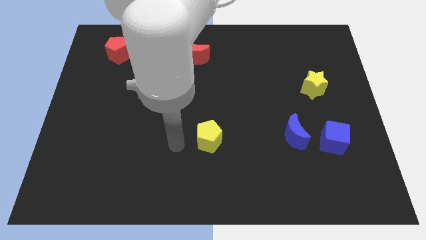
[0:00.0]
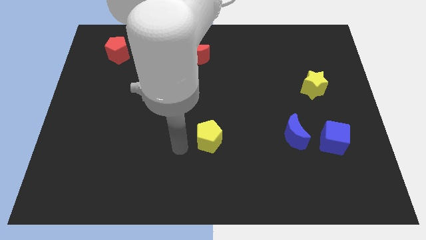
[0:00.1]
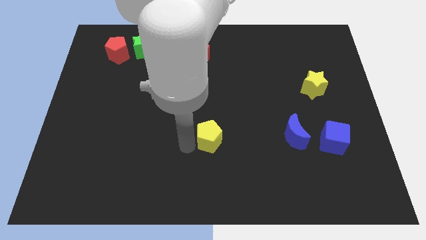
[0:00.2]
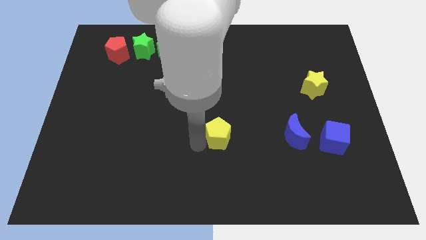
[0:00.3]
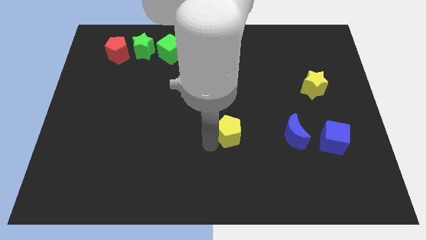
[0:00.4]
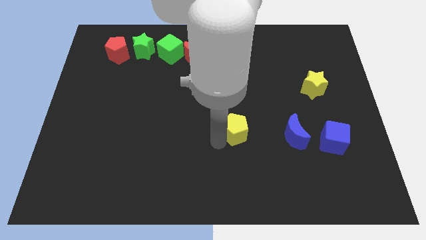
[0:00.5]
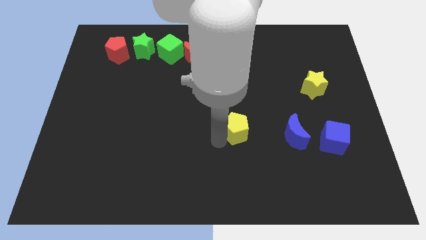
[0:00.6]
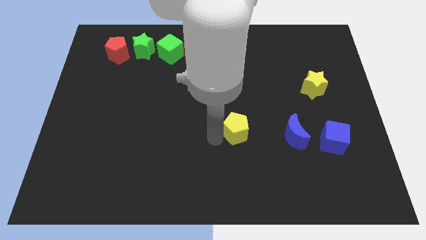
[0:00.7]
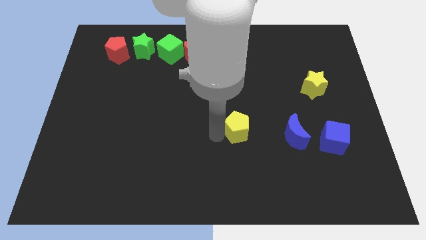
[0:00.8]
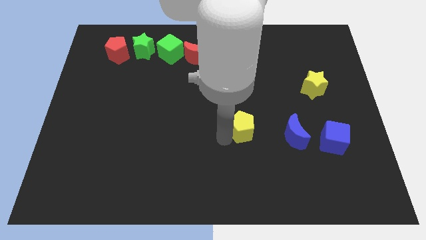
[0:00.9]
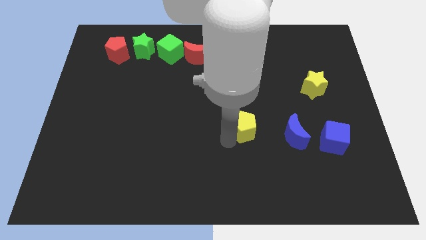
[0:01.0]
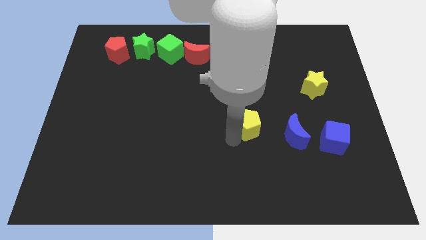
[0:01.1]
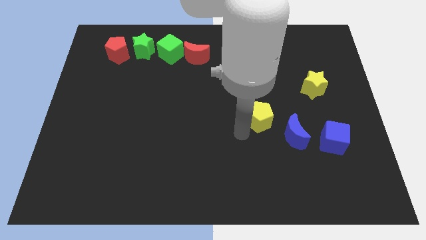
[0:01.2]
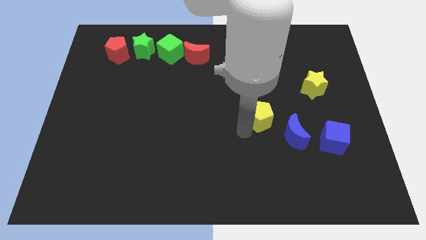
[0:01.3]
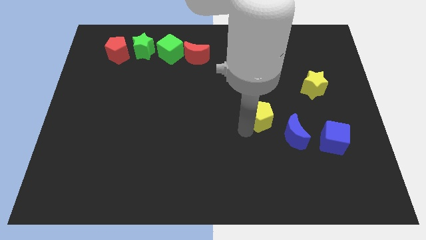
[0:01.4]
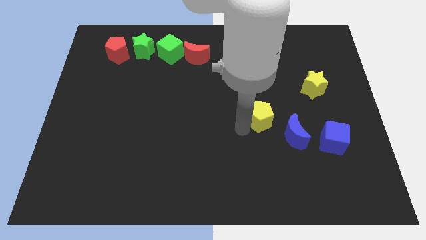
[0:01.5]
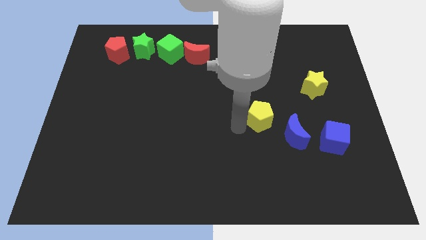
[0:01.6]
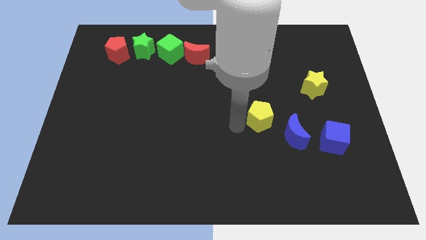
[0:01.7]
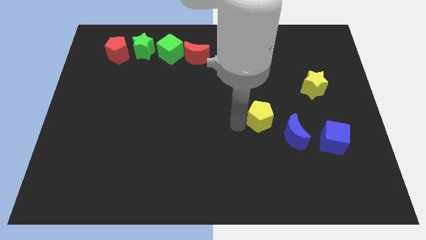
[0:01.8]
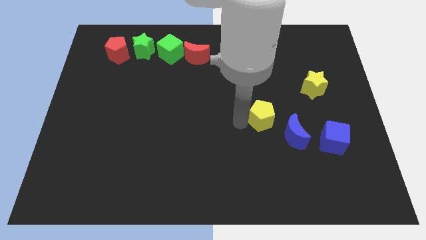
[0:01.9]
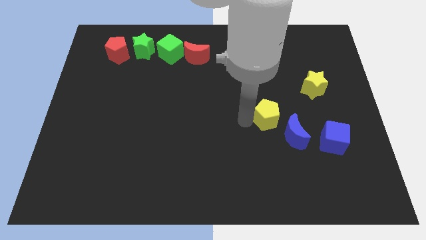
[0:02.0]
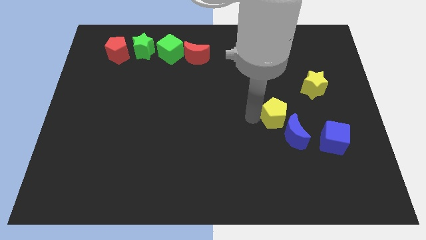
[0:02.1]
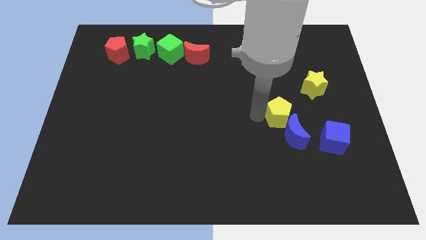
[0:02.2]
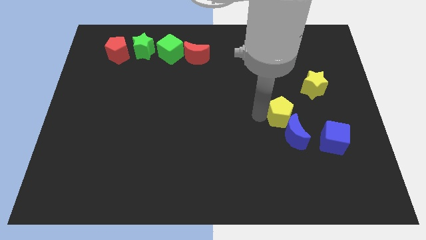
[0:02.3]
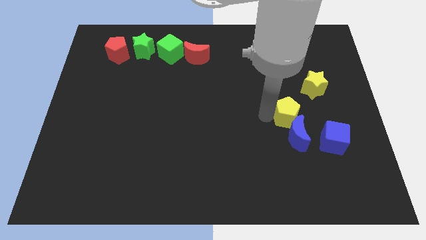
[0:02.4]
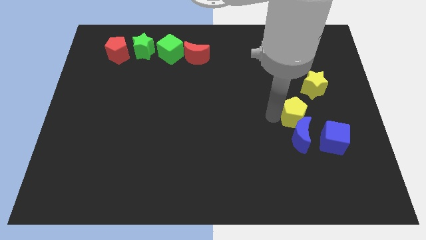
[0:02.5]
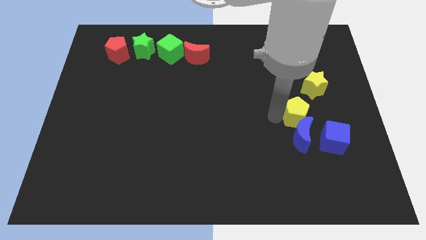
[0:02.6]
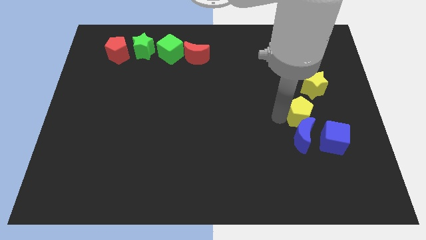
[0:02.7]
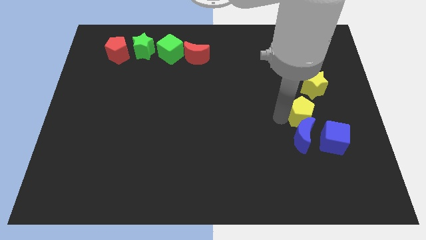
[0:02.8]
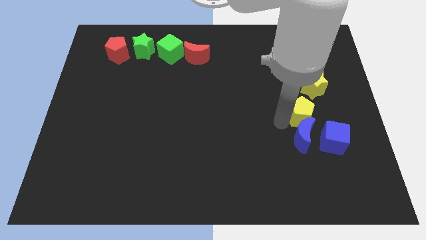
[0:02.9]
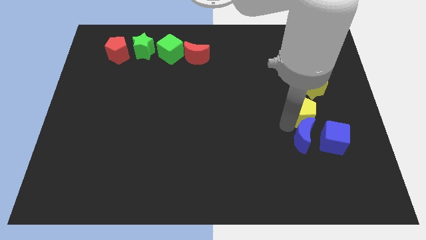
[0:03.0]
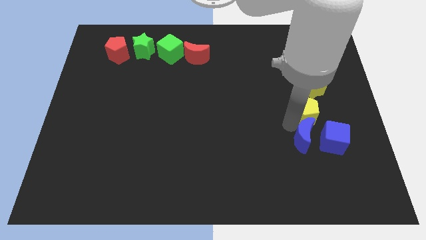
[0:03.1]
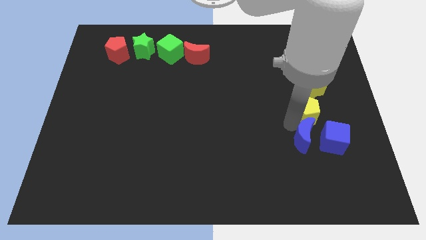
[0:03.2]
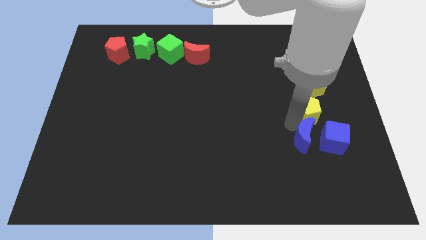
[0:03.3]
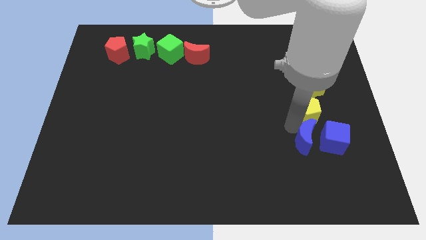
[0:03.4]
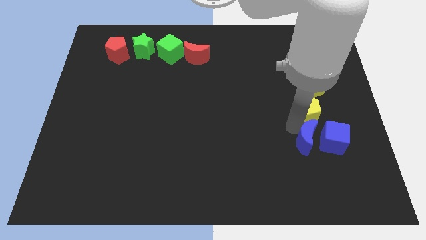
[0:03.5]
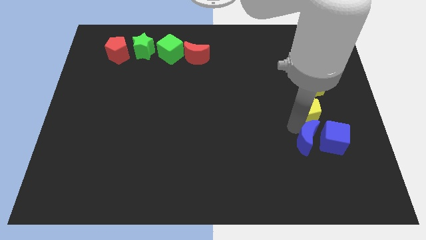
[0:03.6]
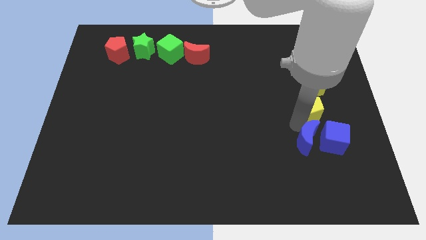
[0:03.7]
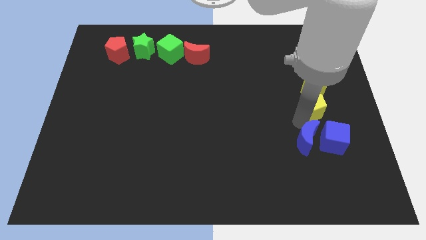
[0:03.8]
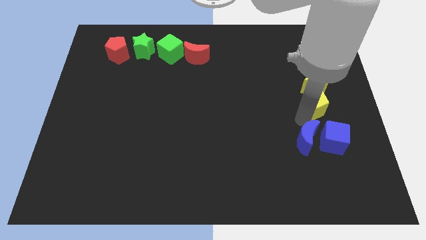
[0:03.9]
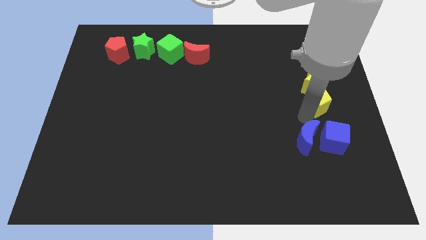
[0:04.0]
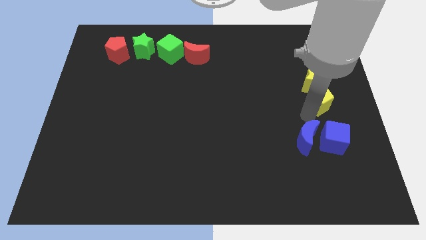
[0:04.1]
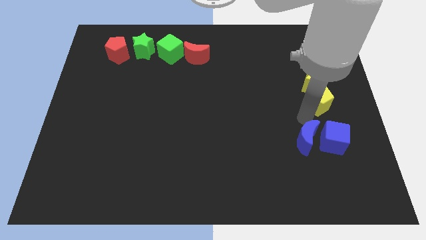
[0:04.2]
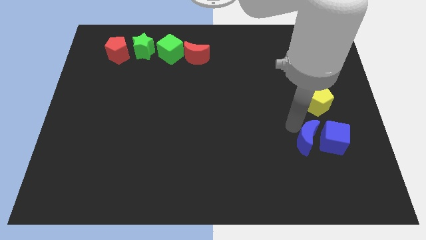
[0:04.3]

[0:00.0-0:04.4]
place the yellow pentagon towards the bottom of the of the yellow star

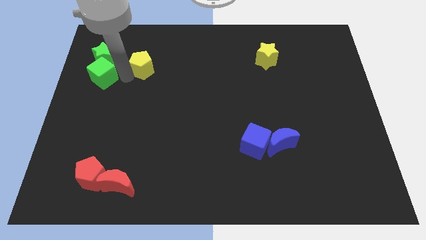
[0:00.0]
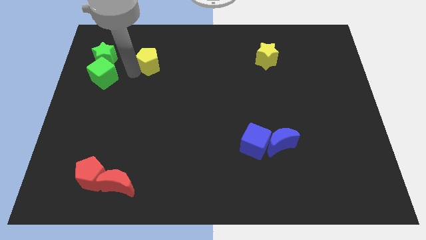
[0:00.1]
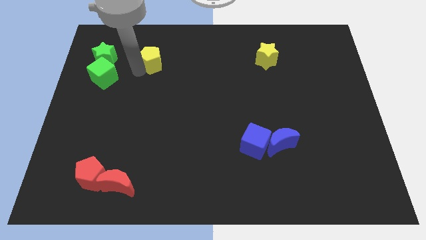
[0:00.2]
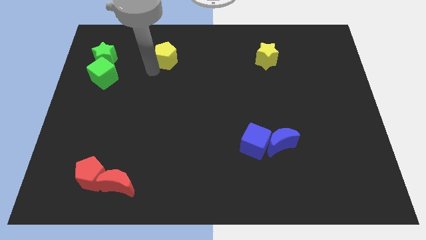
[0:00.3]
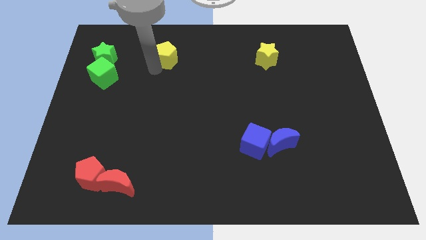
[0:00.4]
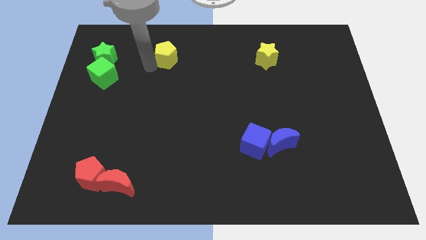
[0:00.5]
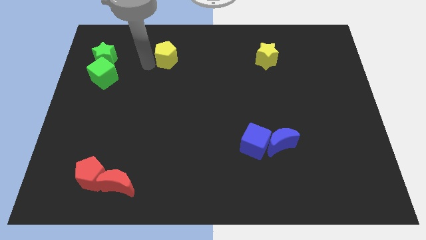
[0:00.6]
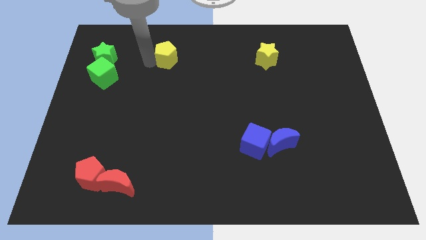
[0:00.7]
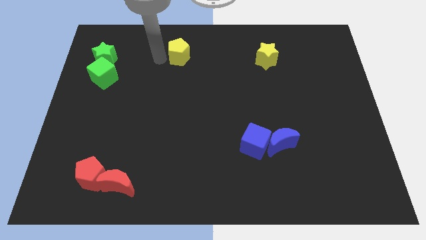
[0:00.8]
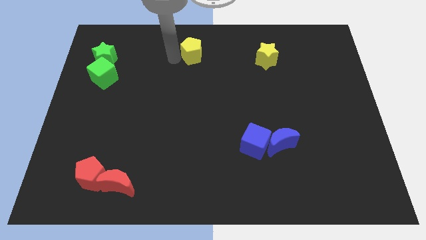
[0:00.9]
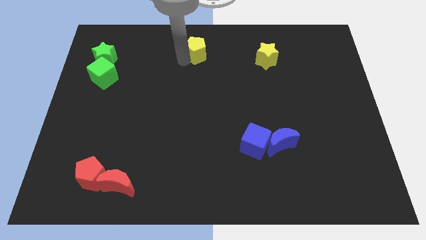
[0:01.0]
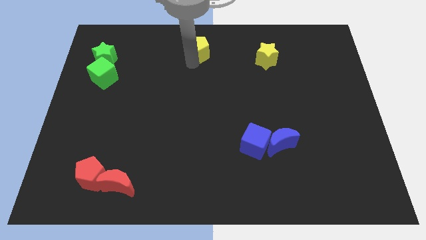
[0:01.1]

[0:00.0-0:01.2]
place yellow pentagon to the top

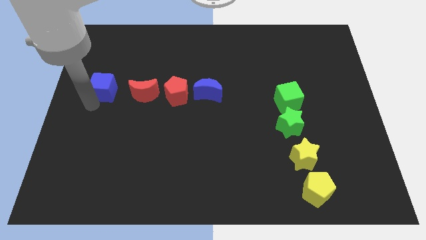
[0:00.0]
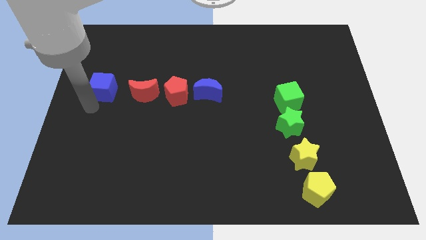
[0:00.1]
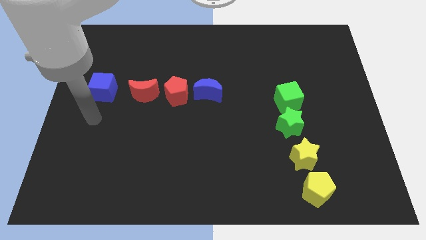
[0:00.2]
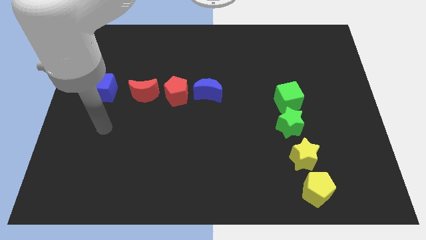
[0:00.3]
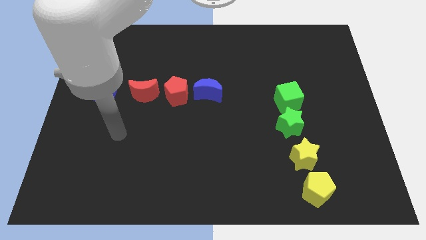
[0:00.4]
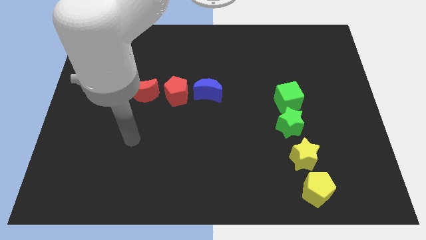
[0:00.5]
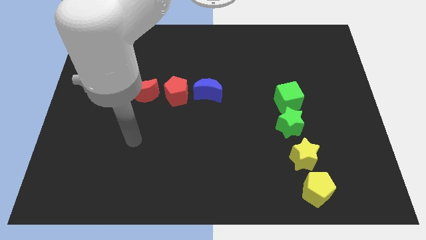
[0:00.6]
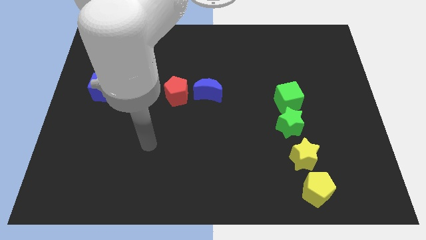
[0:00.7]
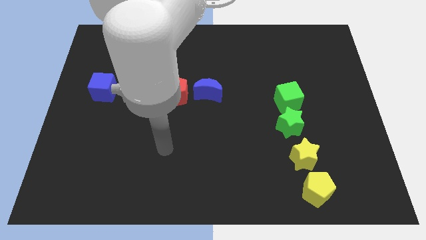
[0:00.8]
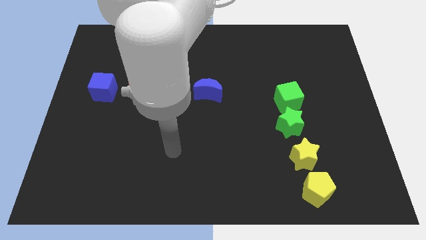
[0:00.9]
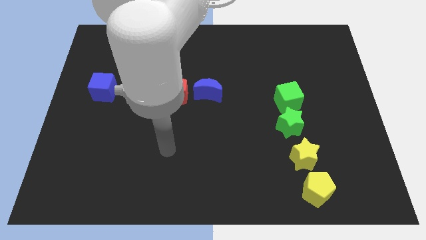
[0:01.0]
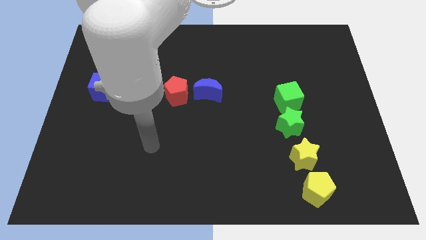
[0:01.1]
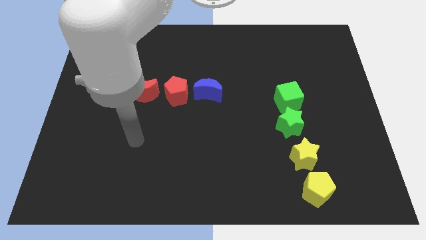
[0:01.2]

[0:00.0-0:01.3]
move the arm below the horizontal line formed

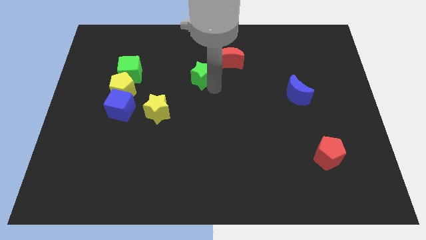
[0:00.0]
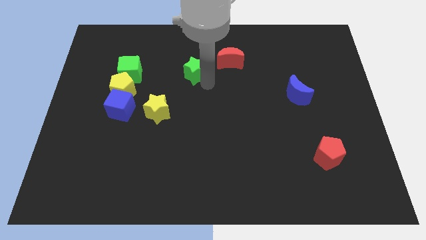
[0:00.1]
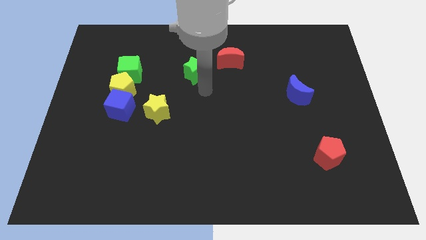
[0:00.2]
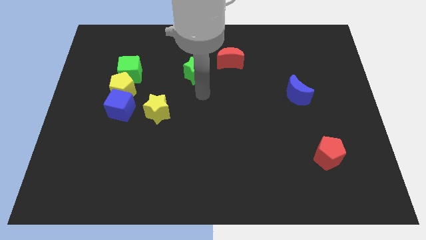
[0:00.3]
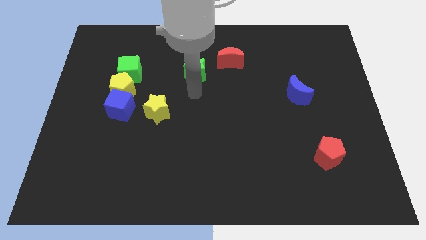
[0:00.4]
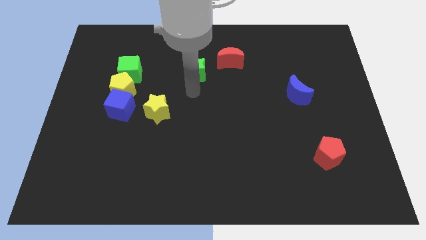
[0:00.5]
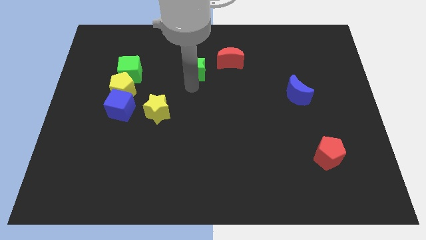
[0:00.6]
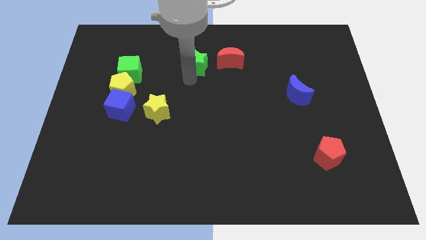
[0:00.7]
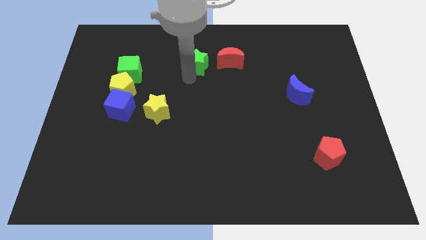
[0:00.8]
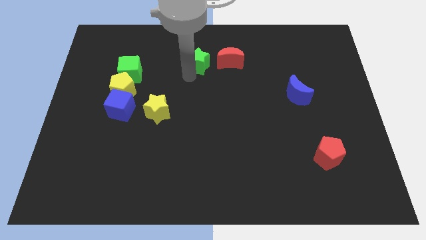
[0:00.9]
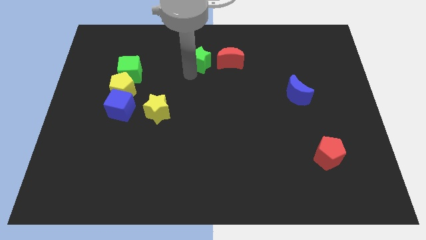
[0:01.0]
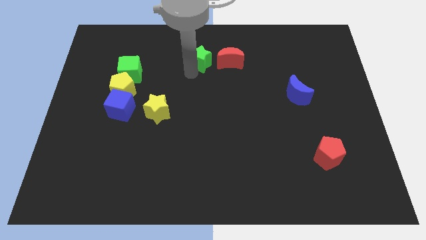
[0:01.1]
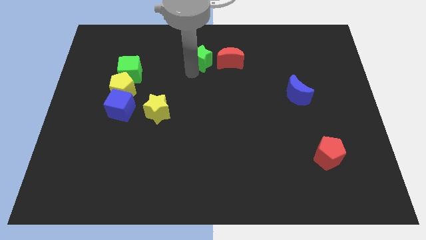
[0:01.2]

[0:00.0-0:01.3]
move the green star to the left side of the red crescent

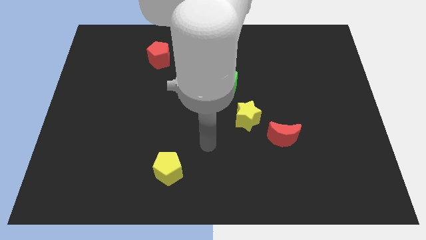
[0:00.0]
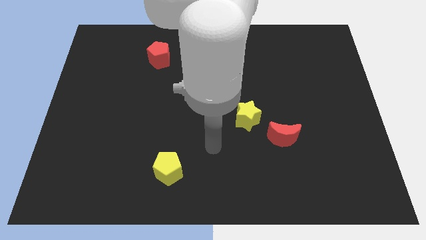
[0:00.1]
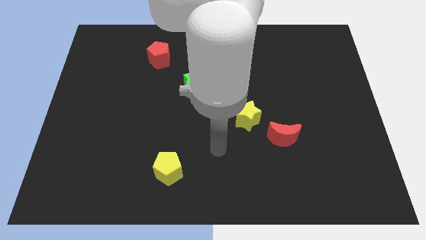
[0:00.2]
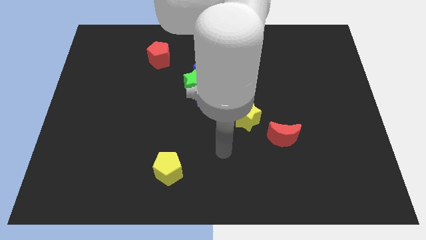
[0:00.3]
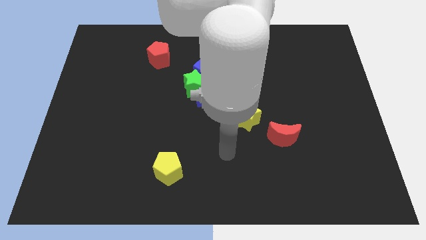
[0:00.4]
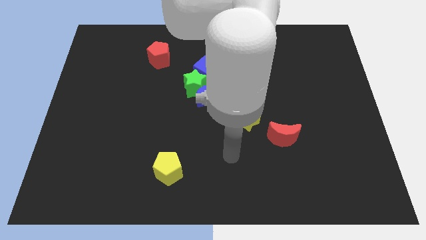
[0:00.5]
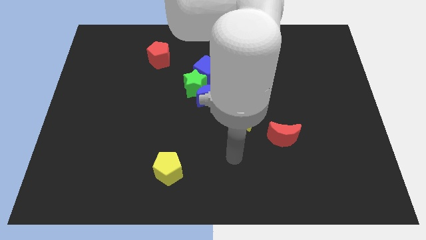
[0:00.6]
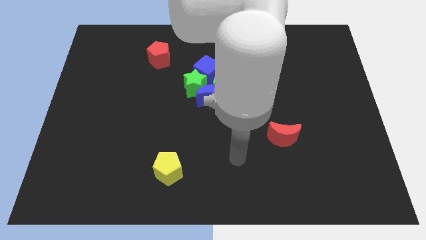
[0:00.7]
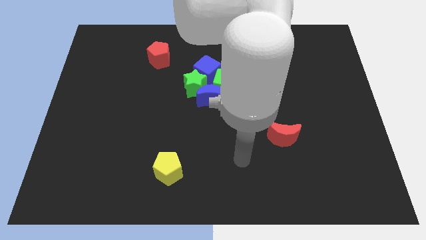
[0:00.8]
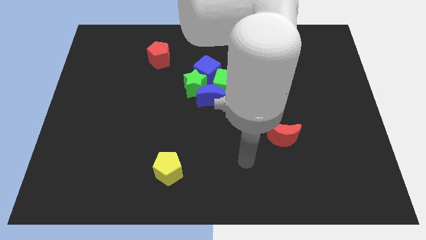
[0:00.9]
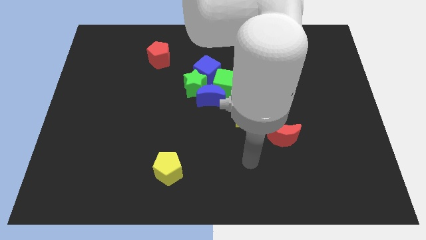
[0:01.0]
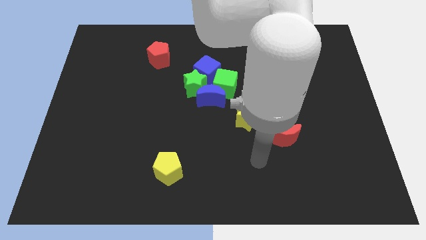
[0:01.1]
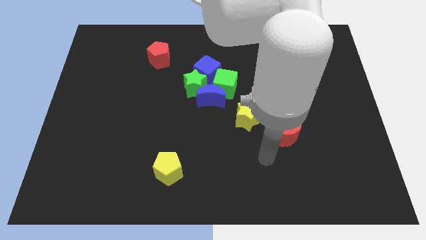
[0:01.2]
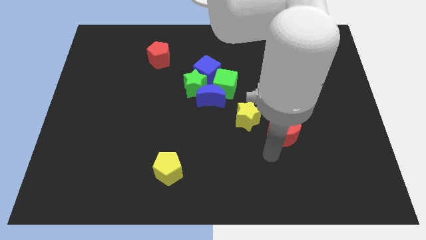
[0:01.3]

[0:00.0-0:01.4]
place the arm under the red moon
